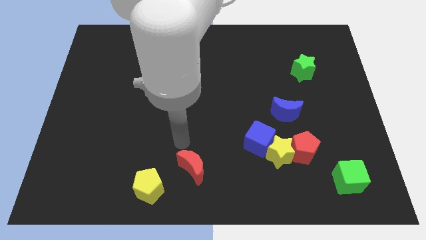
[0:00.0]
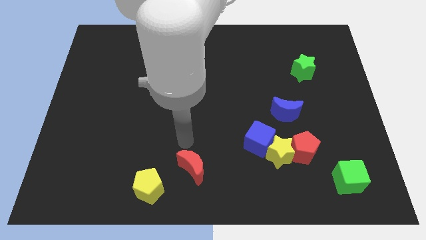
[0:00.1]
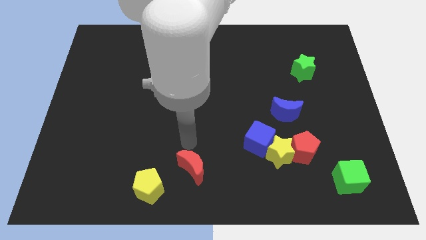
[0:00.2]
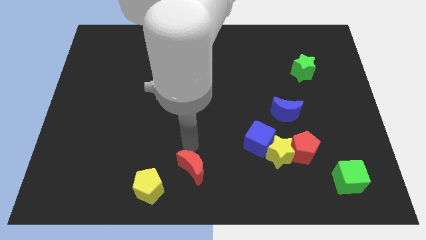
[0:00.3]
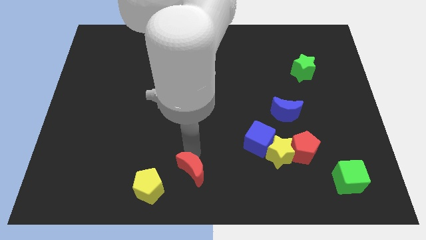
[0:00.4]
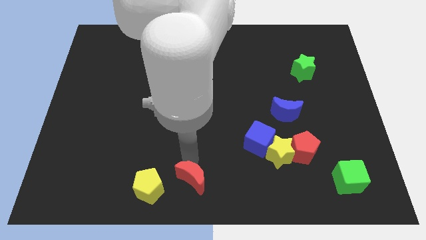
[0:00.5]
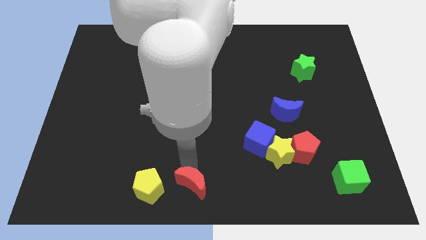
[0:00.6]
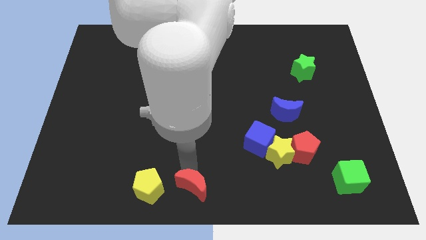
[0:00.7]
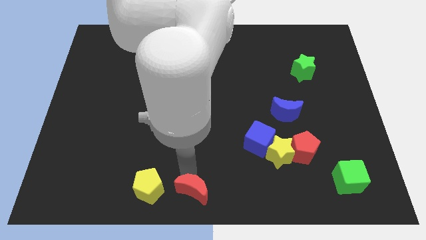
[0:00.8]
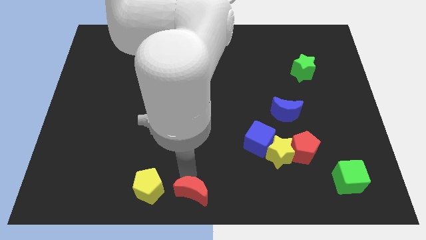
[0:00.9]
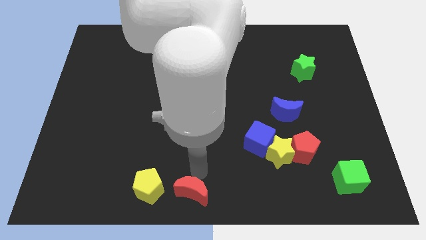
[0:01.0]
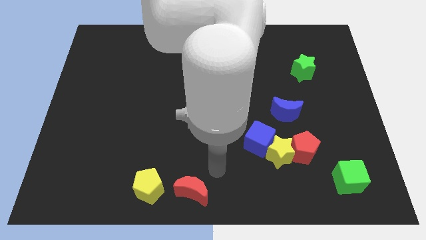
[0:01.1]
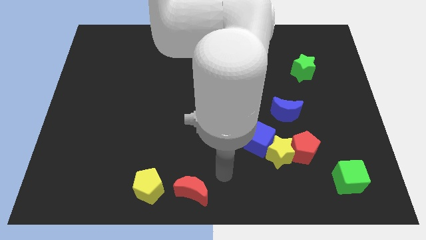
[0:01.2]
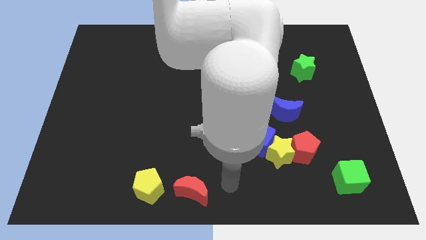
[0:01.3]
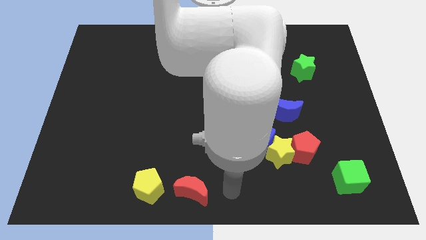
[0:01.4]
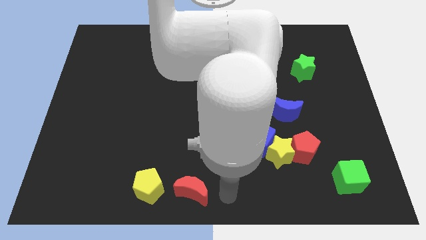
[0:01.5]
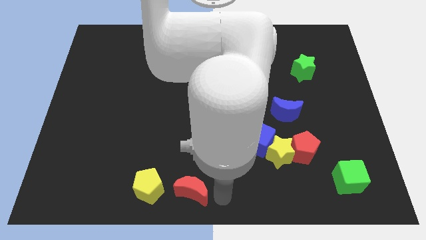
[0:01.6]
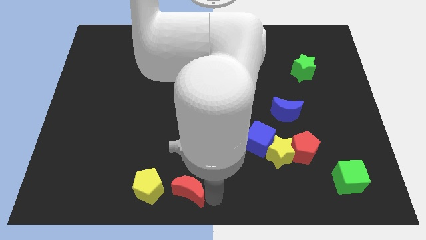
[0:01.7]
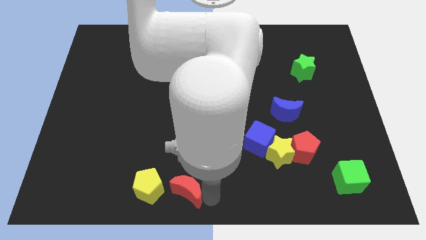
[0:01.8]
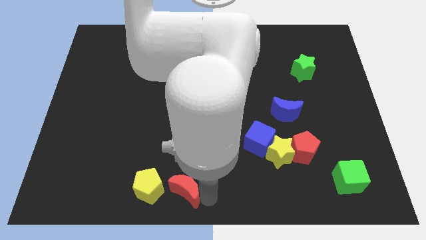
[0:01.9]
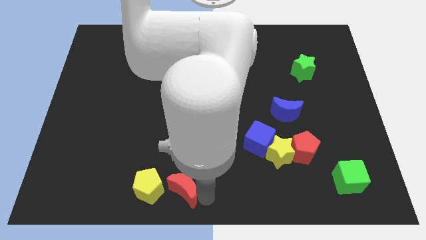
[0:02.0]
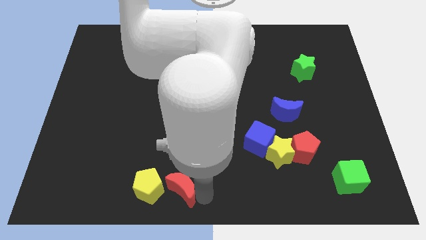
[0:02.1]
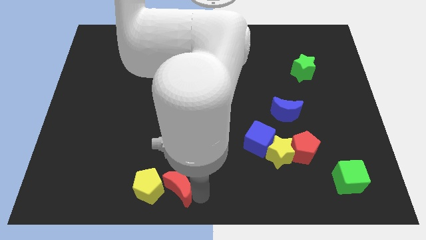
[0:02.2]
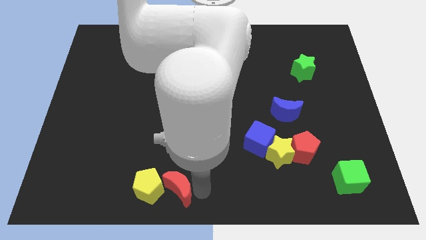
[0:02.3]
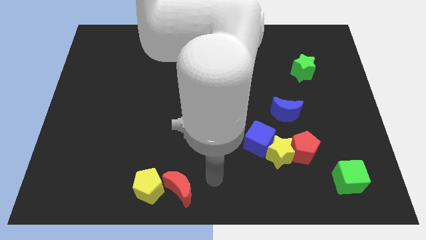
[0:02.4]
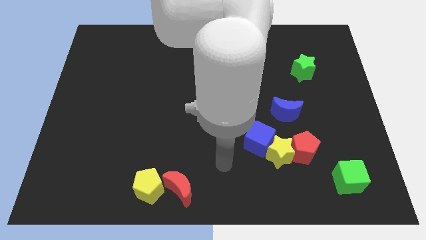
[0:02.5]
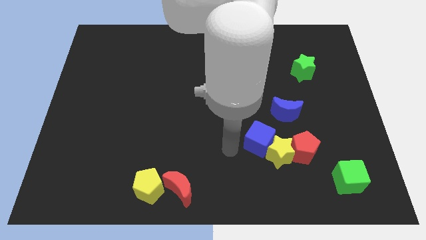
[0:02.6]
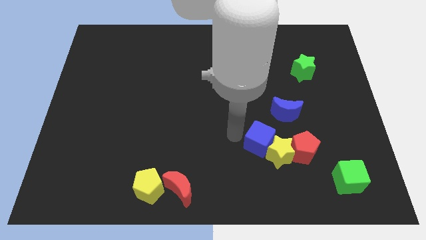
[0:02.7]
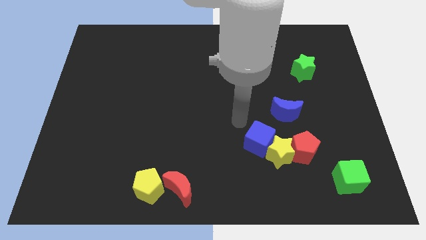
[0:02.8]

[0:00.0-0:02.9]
push the red moon near the yellow pentagon

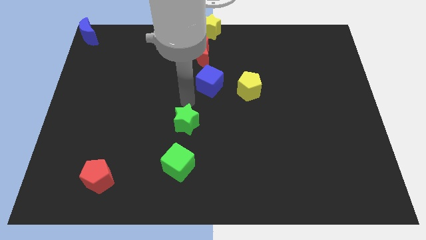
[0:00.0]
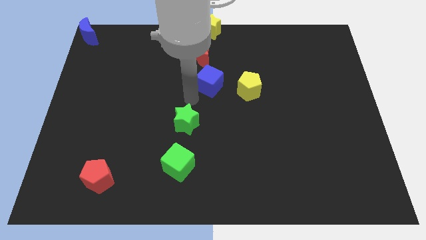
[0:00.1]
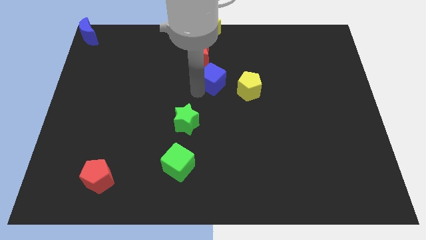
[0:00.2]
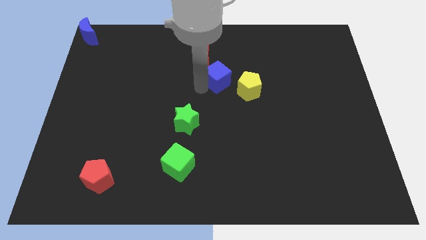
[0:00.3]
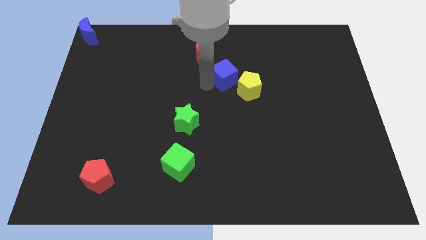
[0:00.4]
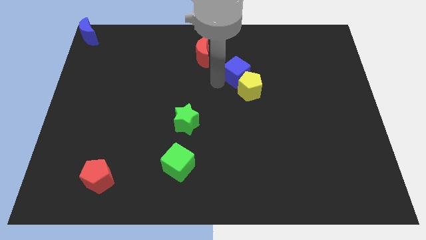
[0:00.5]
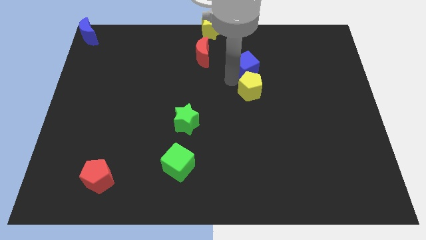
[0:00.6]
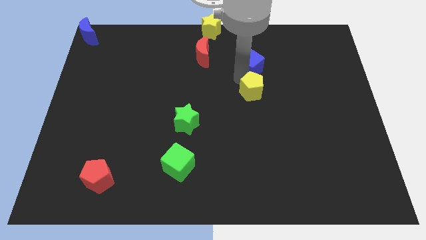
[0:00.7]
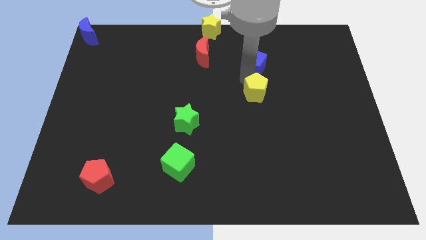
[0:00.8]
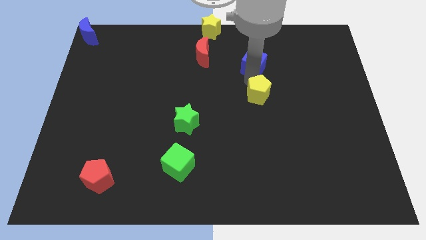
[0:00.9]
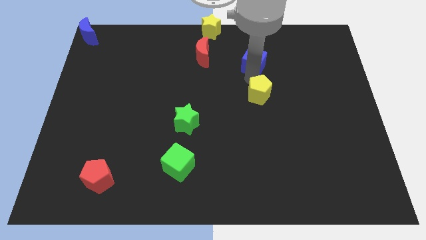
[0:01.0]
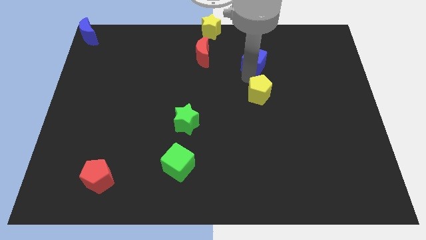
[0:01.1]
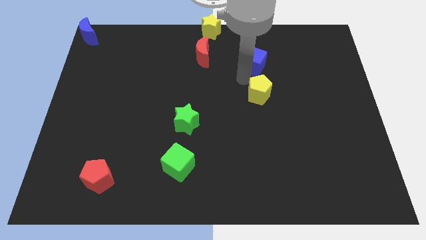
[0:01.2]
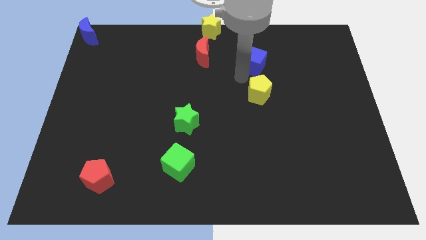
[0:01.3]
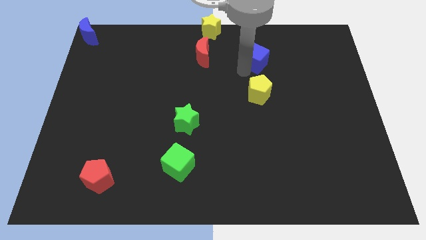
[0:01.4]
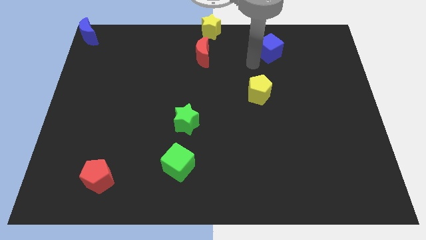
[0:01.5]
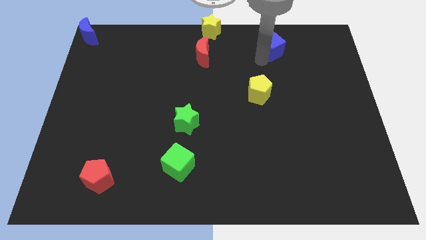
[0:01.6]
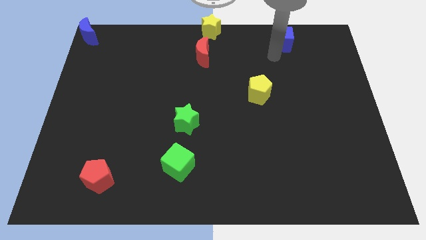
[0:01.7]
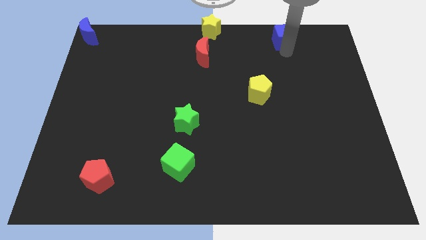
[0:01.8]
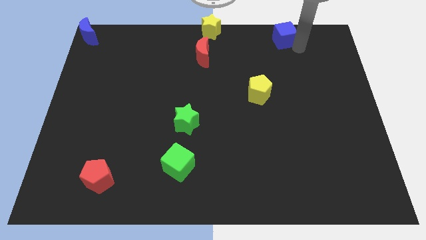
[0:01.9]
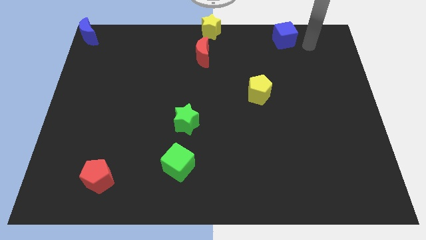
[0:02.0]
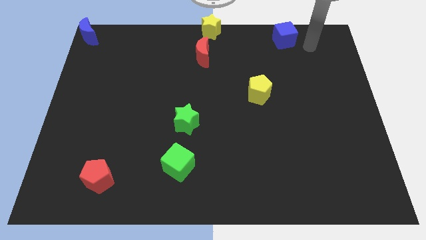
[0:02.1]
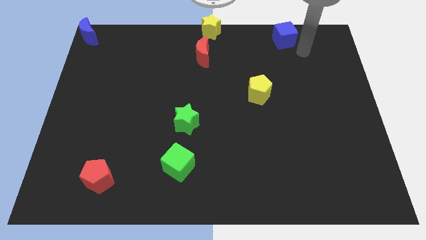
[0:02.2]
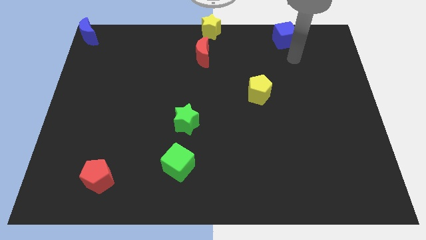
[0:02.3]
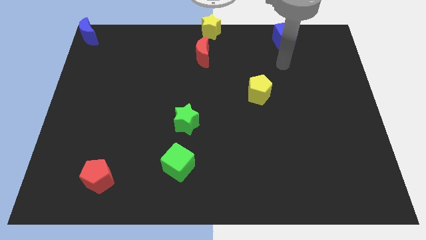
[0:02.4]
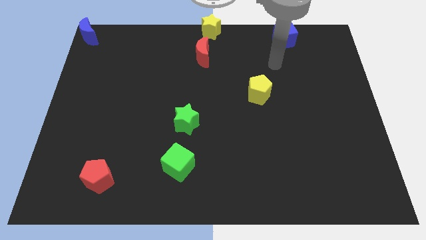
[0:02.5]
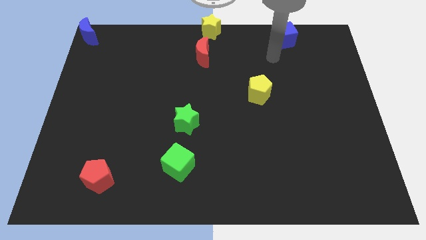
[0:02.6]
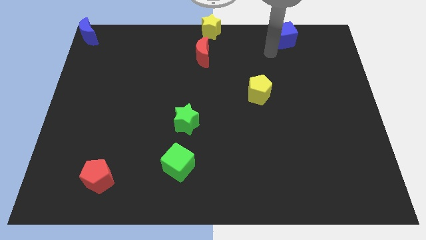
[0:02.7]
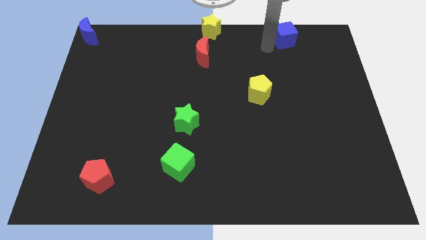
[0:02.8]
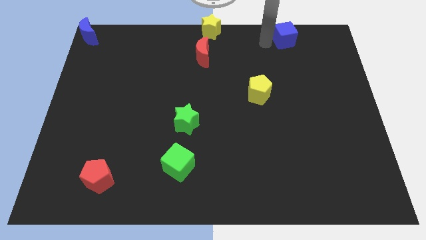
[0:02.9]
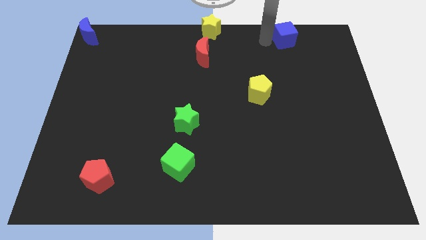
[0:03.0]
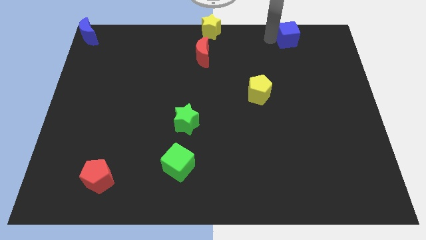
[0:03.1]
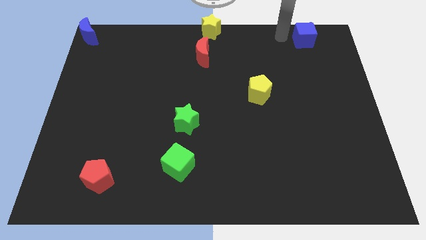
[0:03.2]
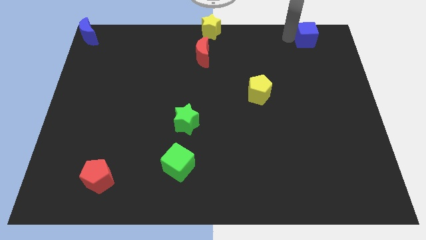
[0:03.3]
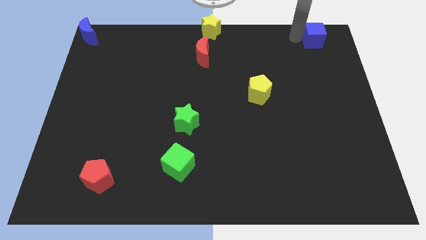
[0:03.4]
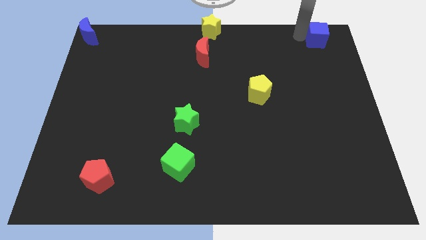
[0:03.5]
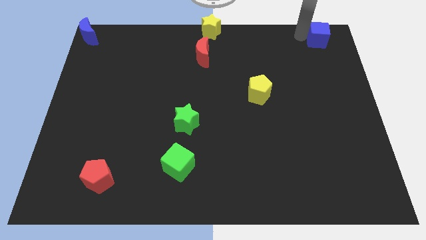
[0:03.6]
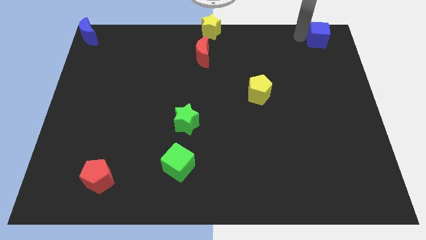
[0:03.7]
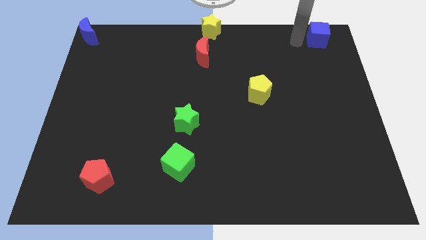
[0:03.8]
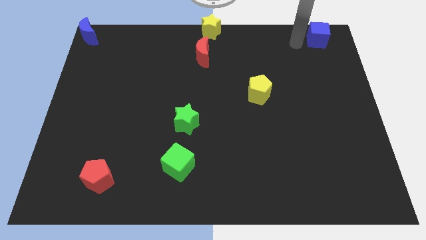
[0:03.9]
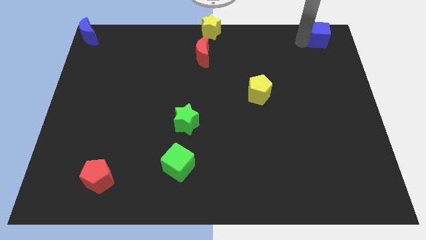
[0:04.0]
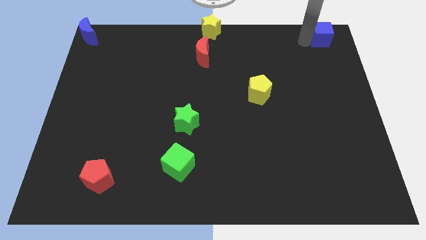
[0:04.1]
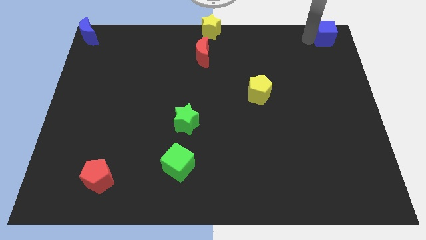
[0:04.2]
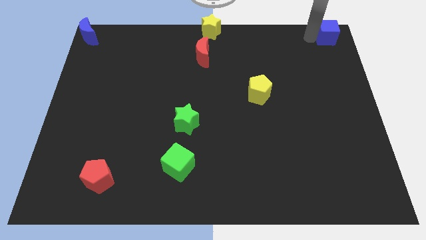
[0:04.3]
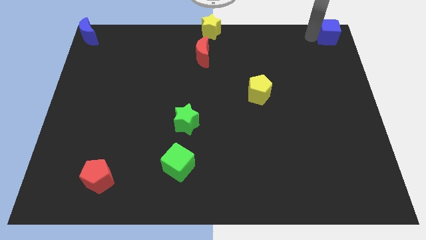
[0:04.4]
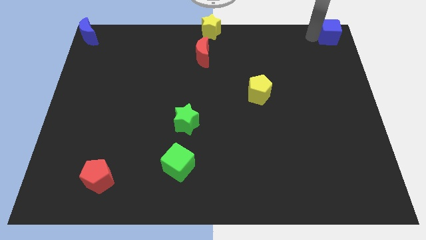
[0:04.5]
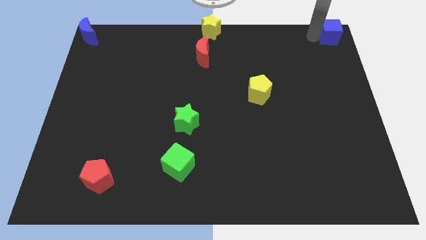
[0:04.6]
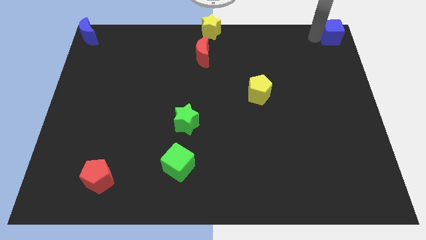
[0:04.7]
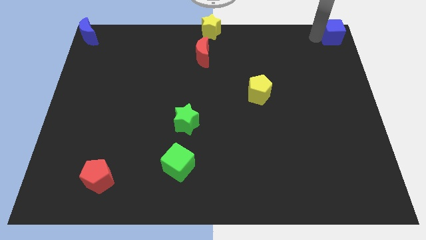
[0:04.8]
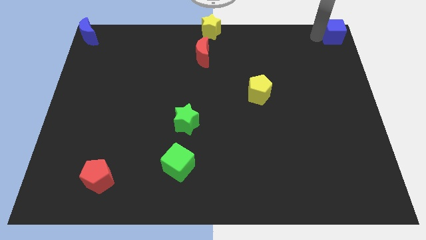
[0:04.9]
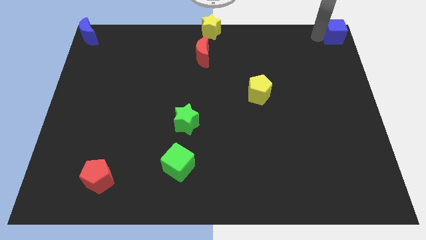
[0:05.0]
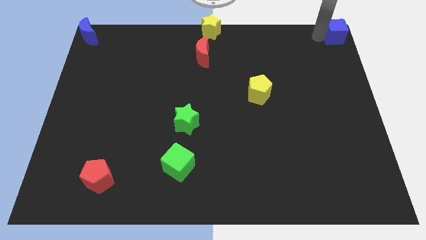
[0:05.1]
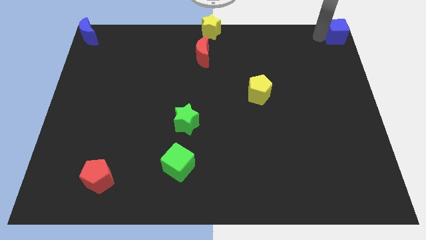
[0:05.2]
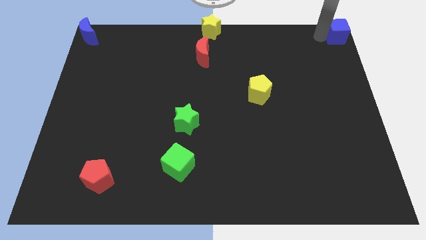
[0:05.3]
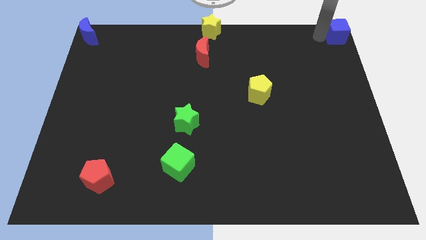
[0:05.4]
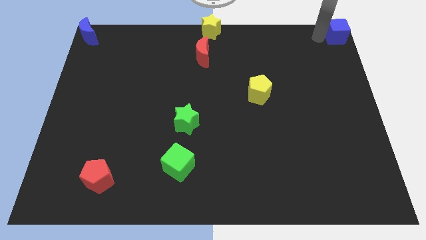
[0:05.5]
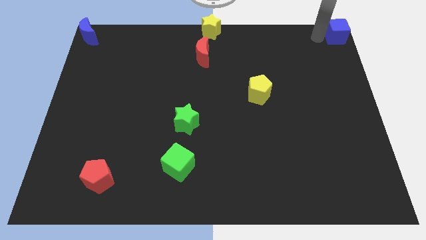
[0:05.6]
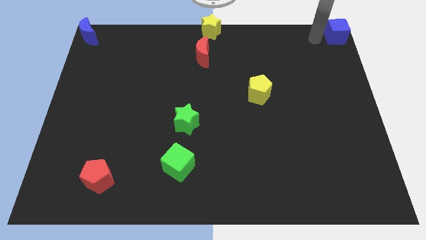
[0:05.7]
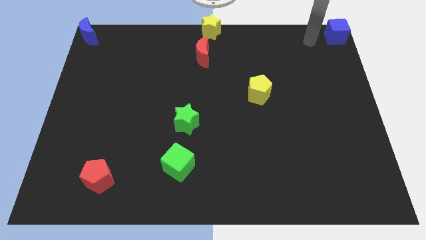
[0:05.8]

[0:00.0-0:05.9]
move the blue cube to the top right side corner of the board

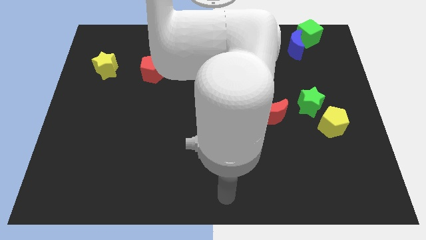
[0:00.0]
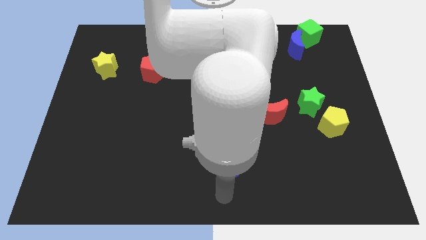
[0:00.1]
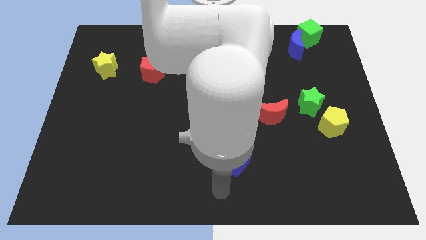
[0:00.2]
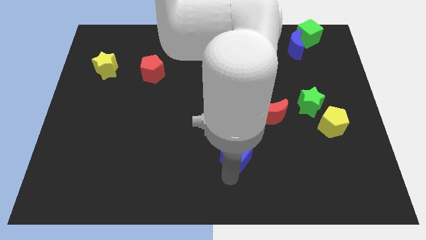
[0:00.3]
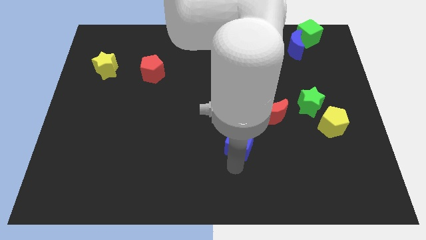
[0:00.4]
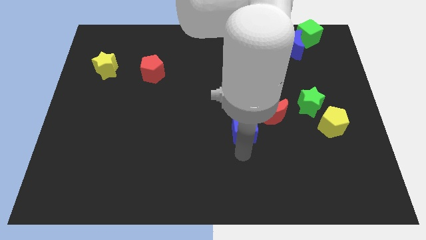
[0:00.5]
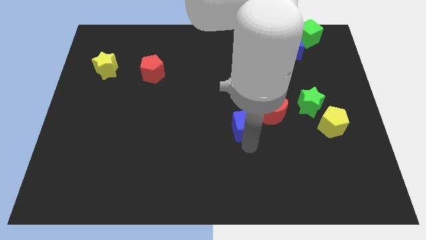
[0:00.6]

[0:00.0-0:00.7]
move the blue cube to the left of the red crescent
